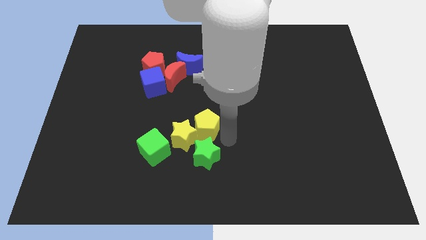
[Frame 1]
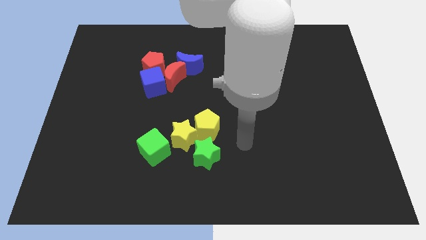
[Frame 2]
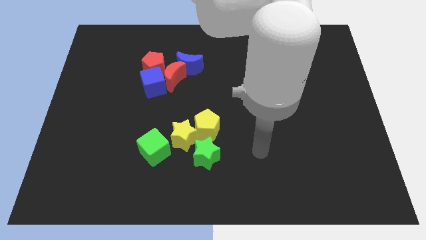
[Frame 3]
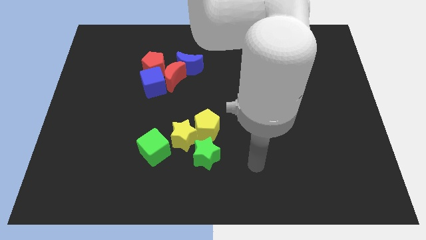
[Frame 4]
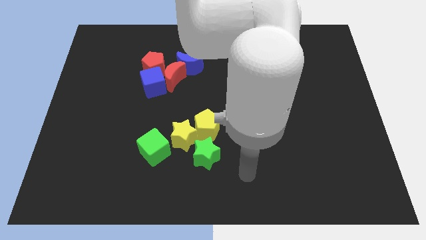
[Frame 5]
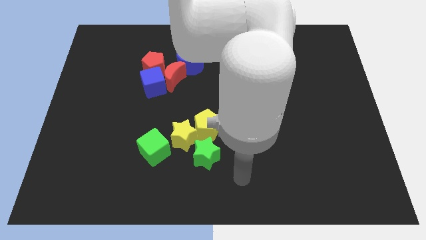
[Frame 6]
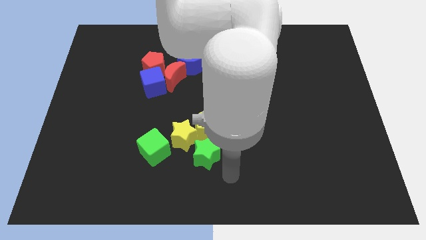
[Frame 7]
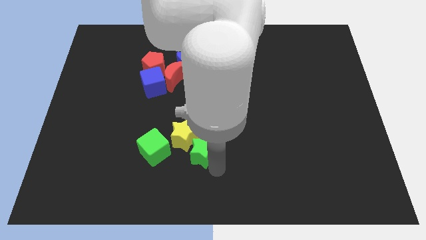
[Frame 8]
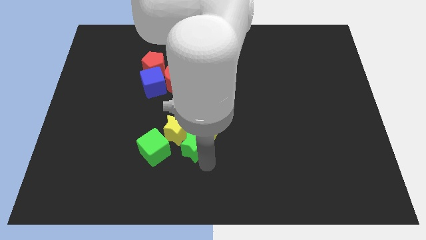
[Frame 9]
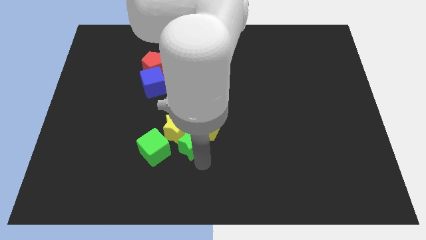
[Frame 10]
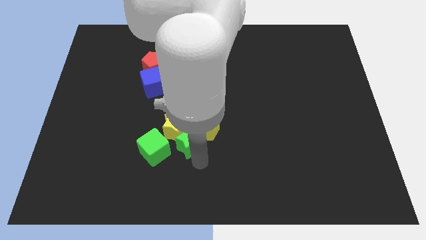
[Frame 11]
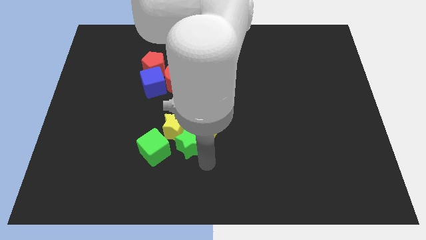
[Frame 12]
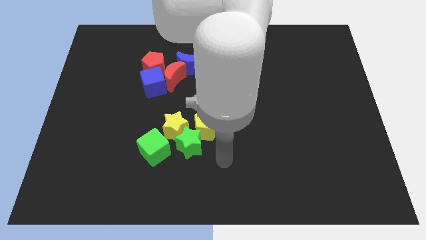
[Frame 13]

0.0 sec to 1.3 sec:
push the green star along with the yellow star towards the blue cube

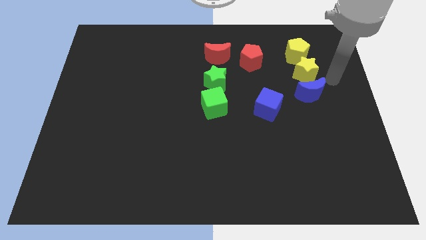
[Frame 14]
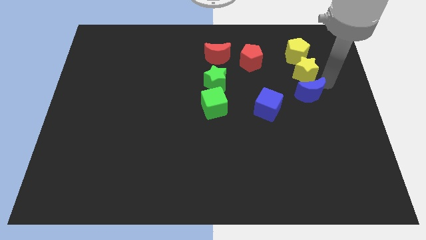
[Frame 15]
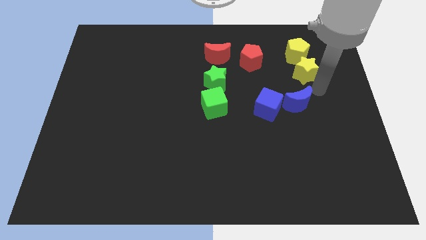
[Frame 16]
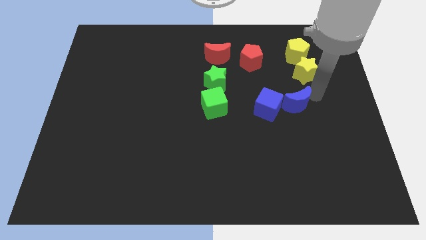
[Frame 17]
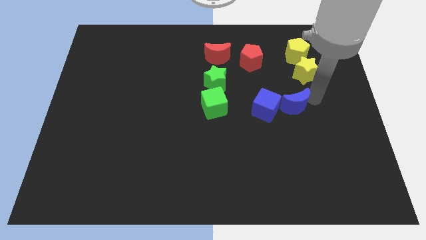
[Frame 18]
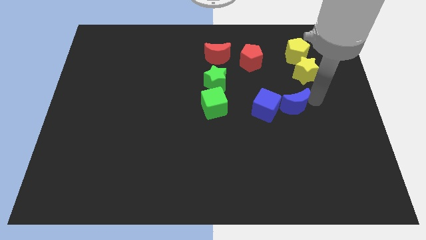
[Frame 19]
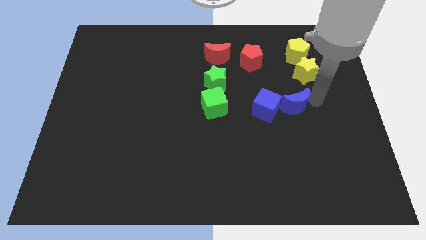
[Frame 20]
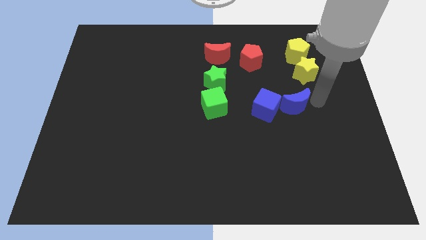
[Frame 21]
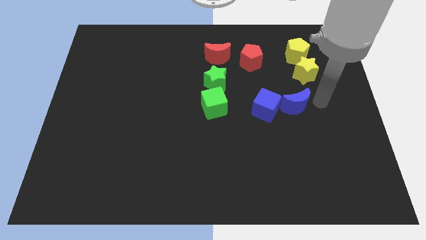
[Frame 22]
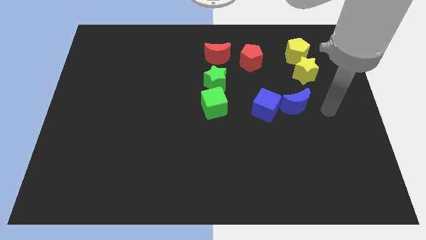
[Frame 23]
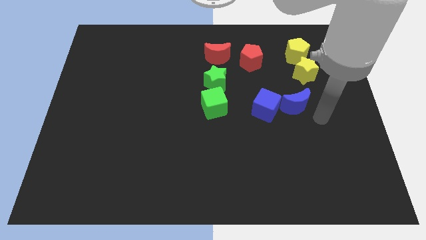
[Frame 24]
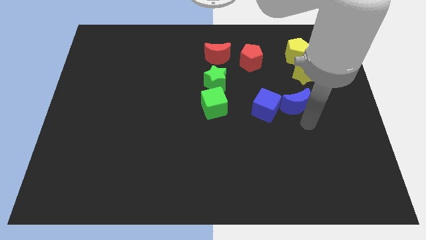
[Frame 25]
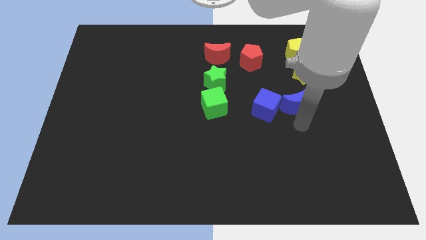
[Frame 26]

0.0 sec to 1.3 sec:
move the blue moon into blue cube

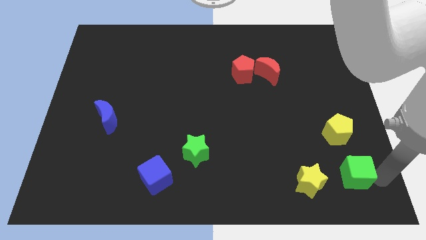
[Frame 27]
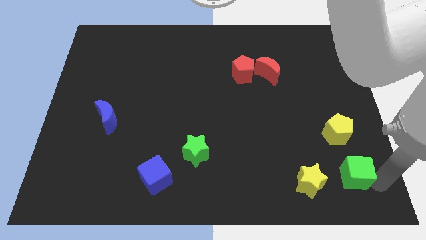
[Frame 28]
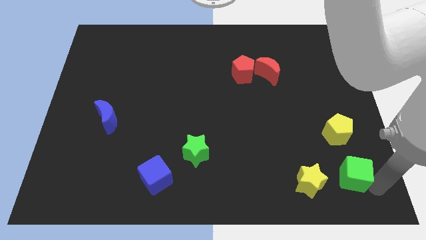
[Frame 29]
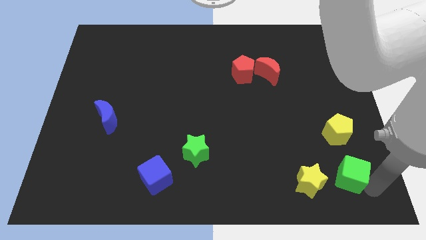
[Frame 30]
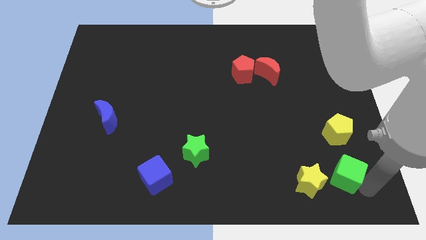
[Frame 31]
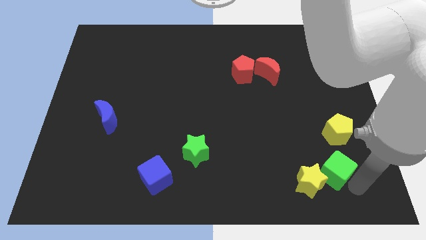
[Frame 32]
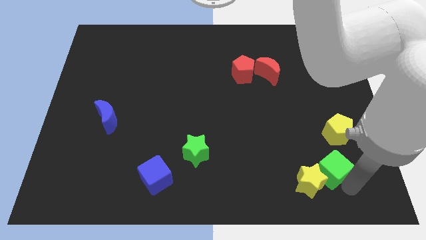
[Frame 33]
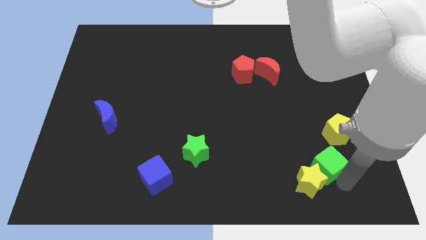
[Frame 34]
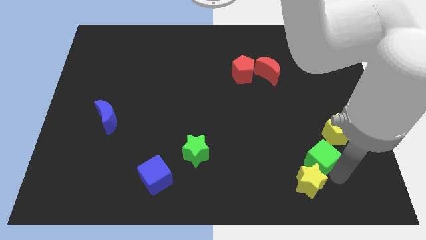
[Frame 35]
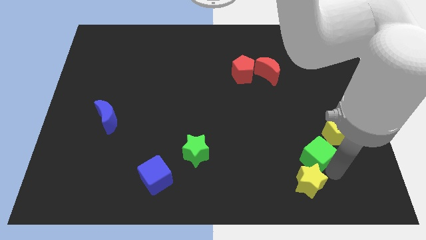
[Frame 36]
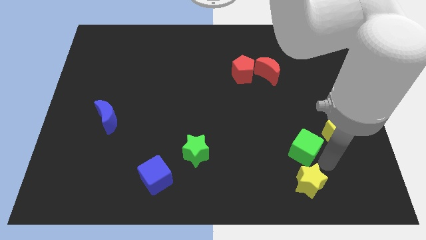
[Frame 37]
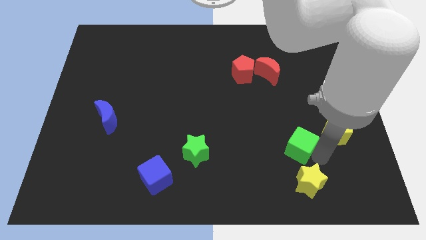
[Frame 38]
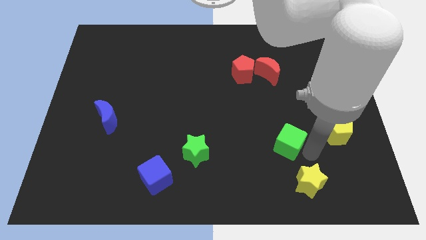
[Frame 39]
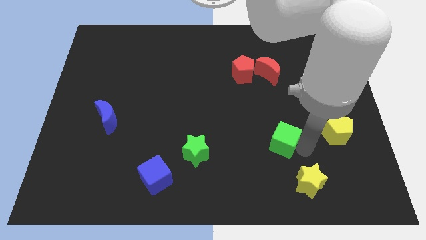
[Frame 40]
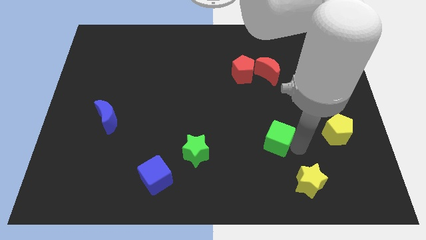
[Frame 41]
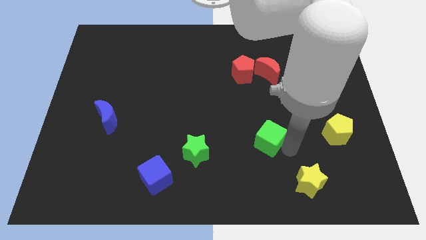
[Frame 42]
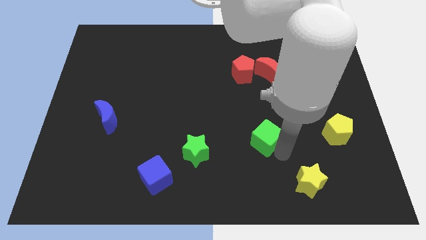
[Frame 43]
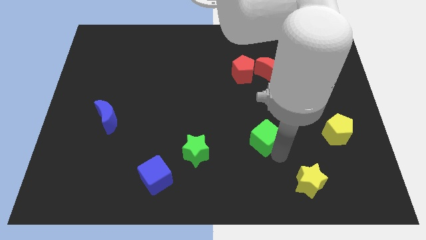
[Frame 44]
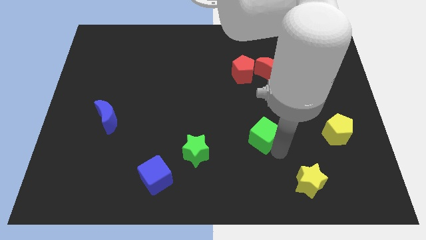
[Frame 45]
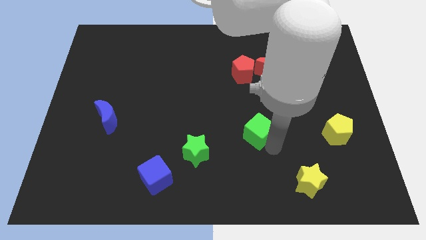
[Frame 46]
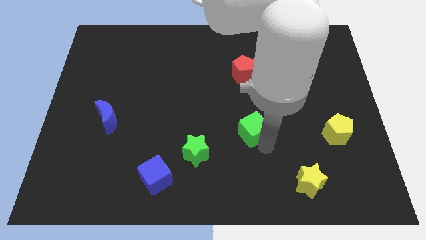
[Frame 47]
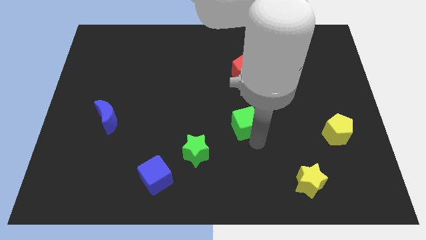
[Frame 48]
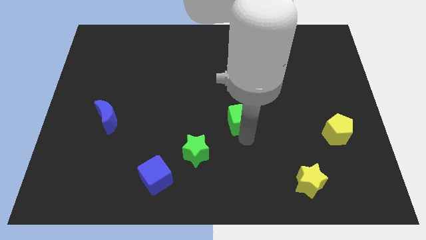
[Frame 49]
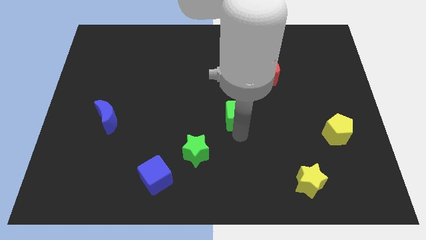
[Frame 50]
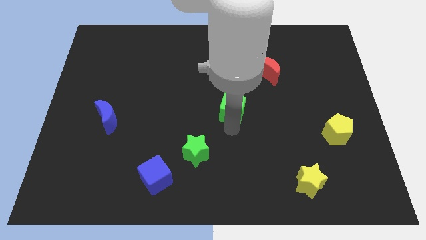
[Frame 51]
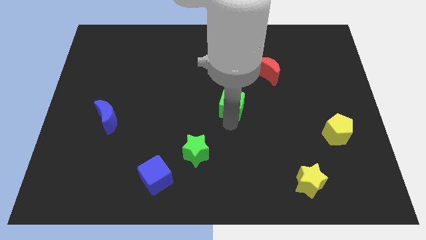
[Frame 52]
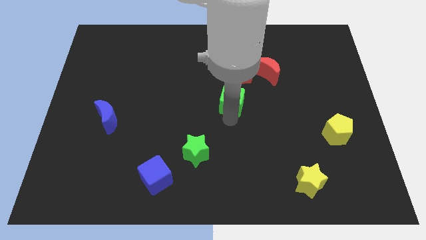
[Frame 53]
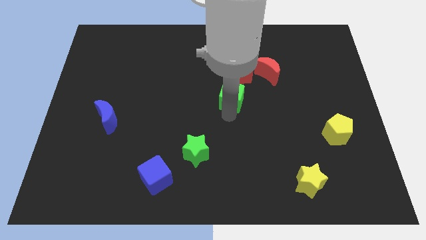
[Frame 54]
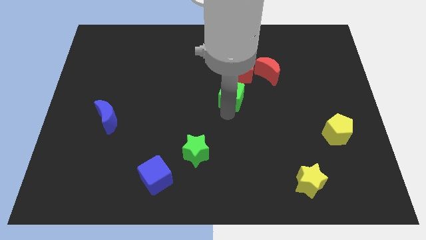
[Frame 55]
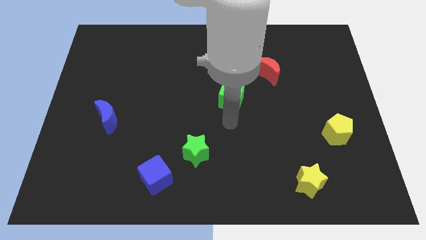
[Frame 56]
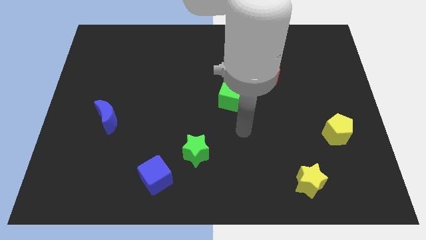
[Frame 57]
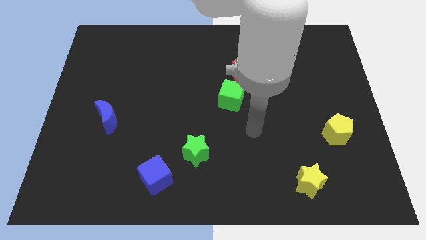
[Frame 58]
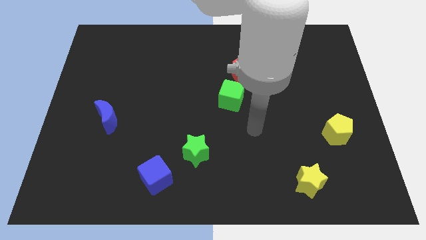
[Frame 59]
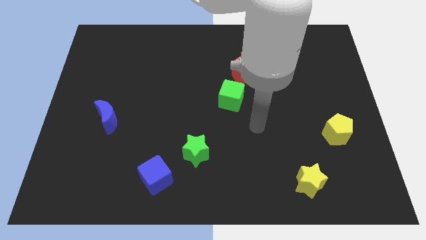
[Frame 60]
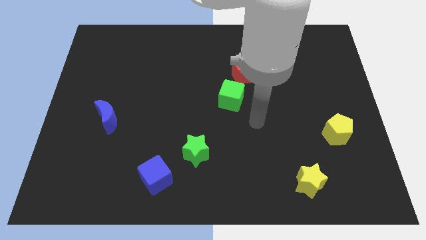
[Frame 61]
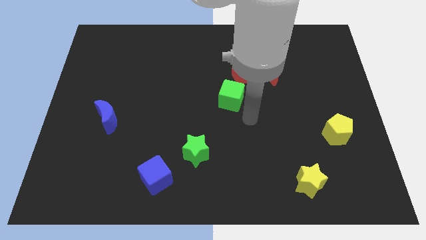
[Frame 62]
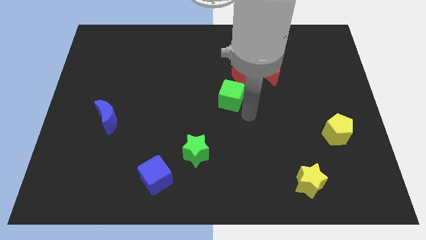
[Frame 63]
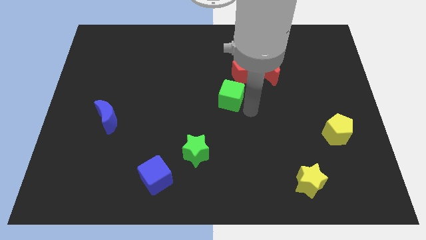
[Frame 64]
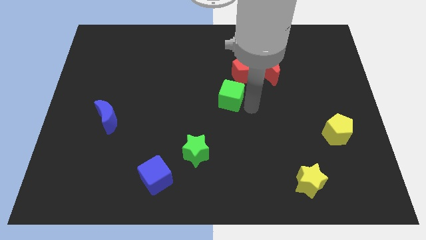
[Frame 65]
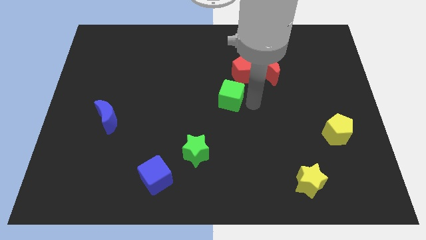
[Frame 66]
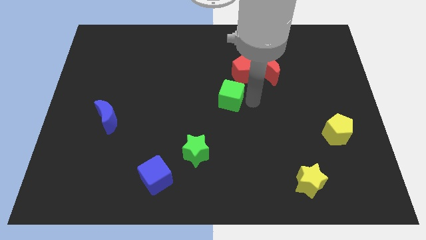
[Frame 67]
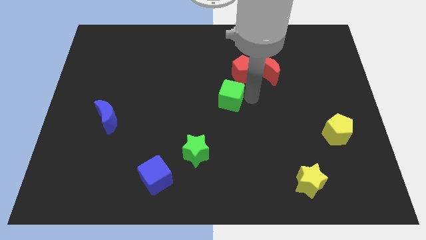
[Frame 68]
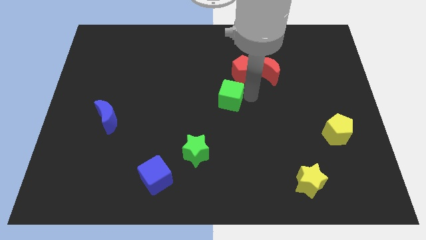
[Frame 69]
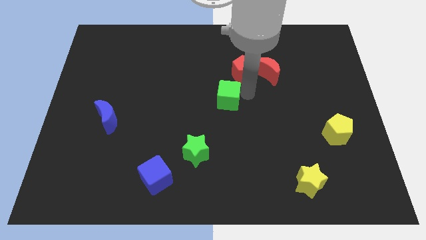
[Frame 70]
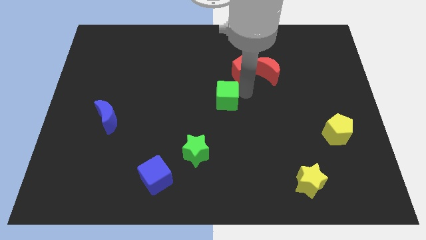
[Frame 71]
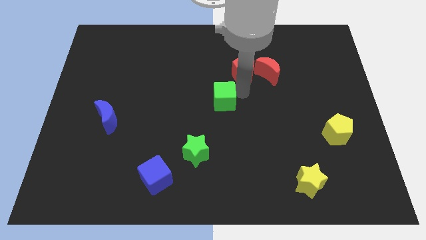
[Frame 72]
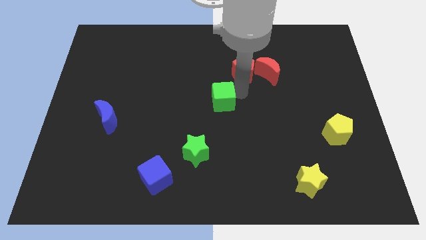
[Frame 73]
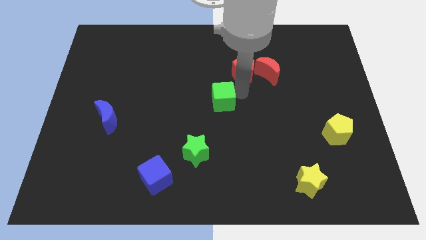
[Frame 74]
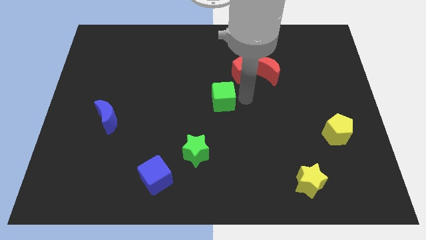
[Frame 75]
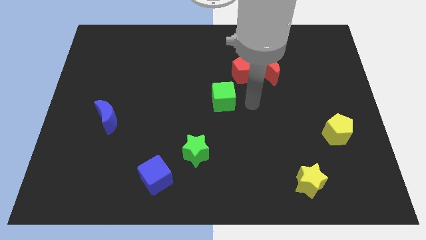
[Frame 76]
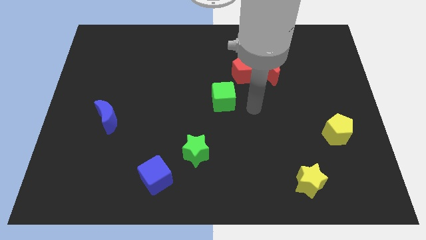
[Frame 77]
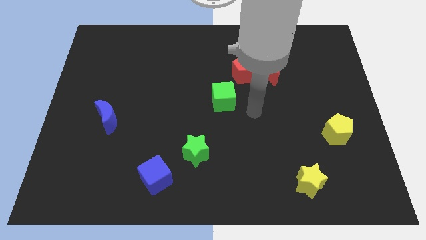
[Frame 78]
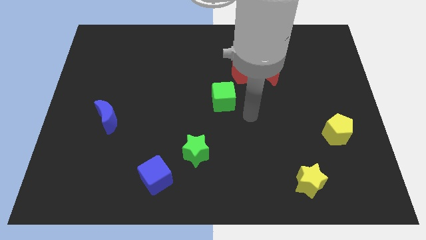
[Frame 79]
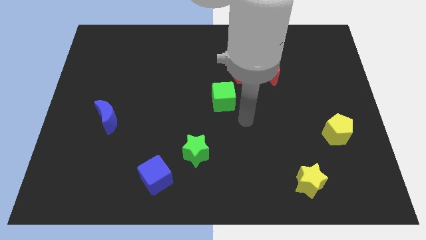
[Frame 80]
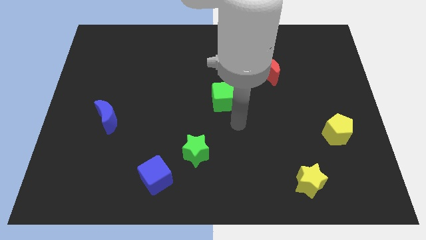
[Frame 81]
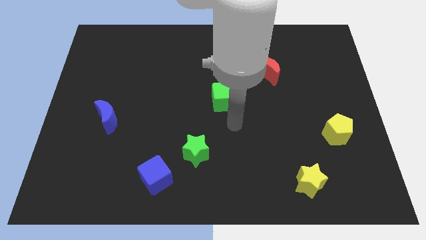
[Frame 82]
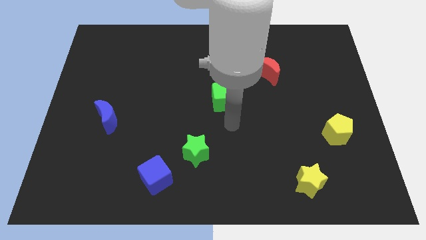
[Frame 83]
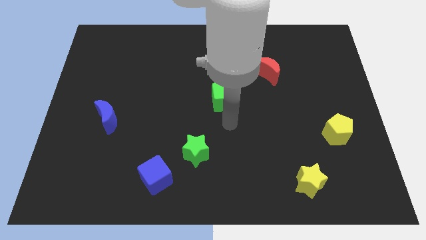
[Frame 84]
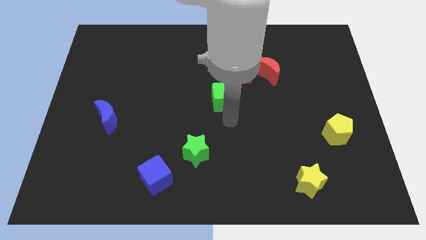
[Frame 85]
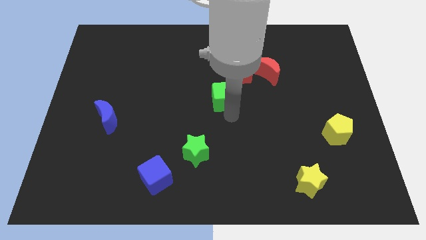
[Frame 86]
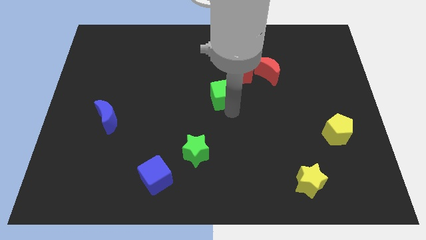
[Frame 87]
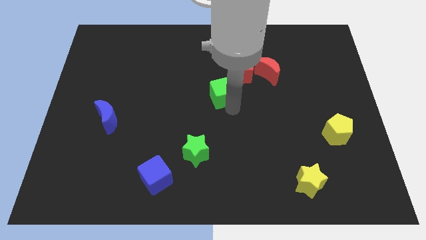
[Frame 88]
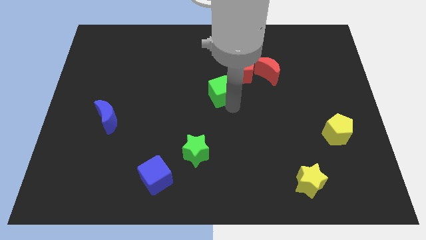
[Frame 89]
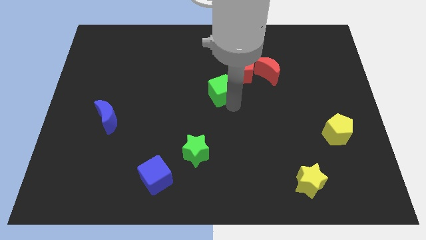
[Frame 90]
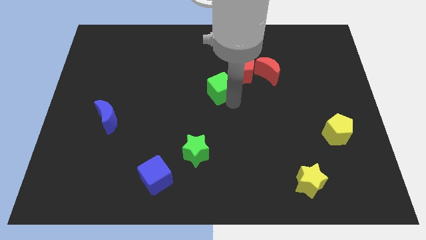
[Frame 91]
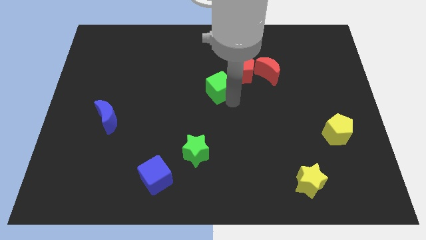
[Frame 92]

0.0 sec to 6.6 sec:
drag the green cube to the bottom left side of the red pentagon
